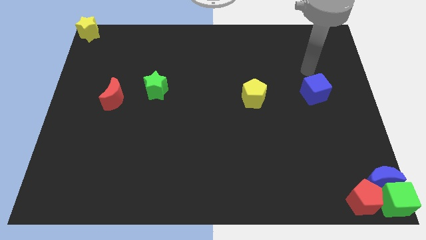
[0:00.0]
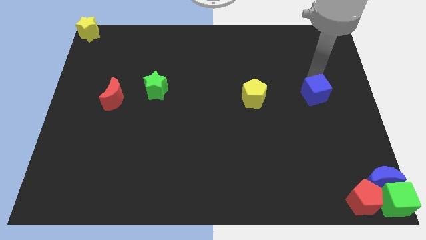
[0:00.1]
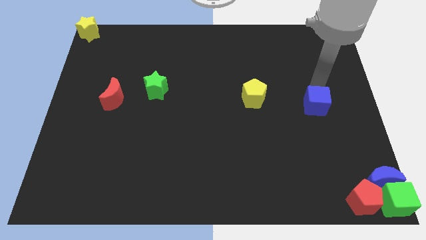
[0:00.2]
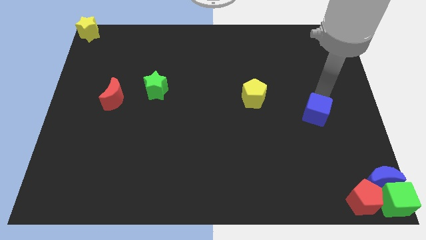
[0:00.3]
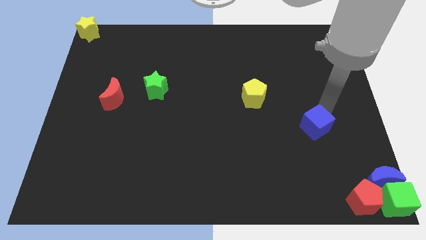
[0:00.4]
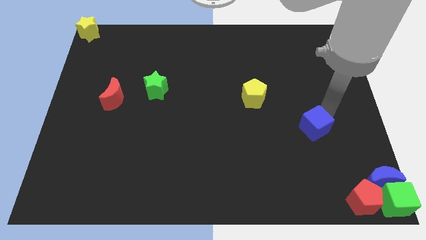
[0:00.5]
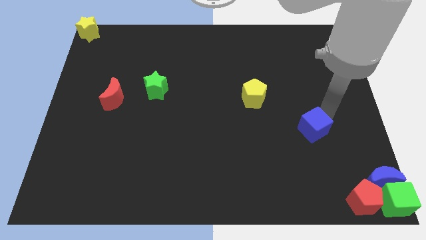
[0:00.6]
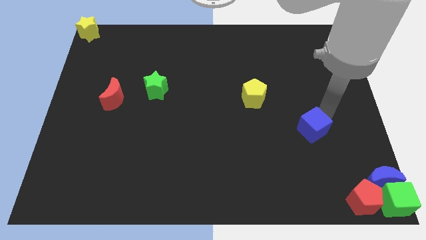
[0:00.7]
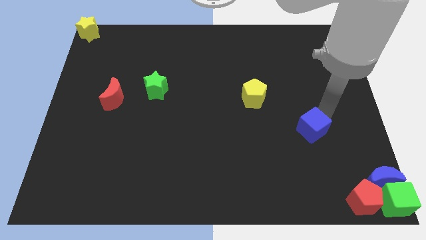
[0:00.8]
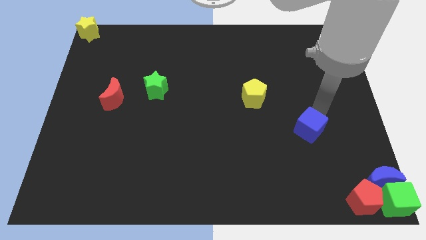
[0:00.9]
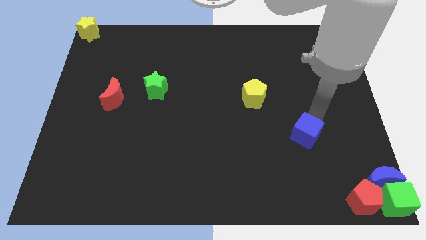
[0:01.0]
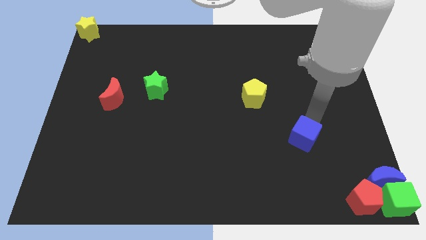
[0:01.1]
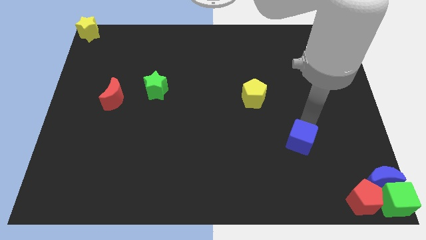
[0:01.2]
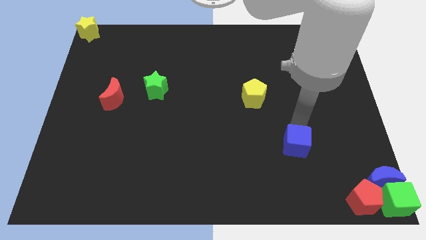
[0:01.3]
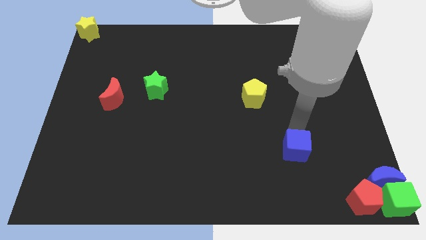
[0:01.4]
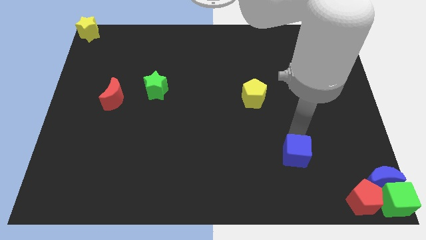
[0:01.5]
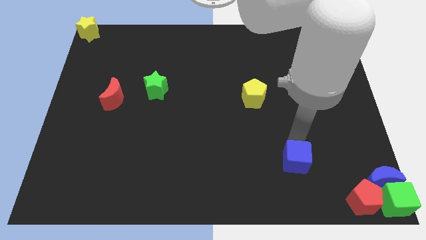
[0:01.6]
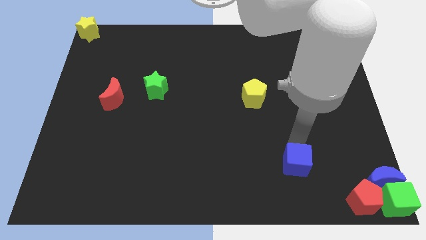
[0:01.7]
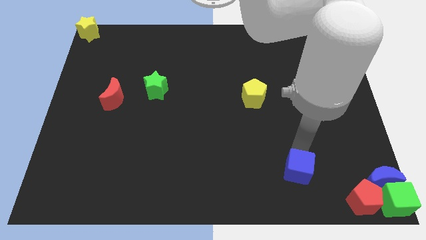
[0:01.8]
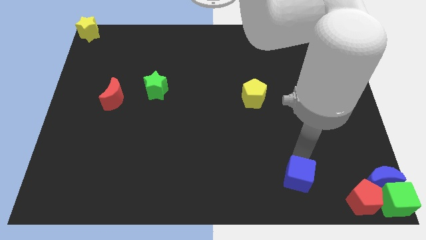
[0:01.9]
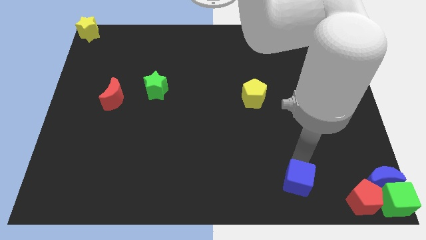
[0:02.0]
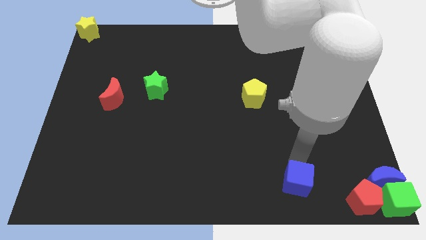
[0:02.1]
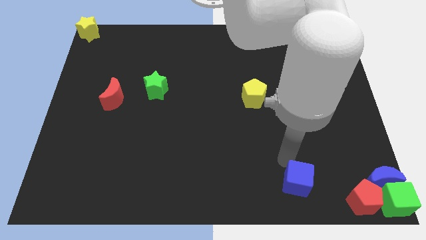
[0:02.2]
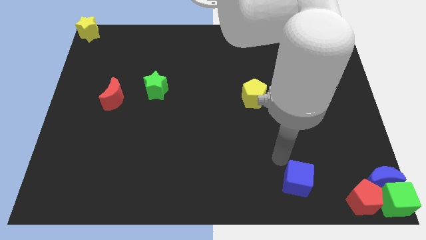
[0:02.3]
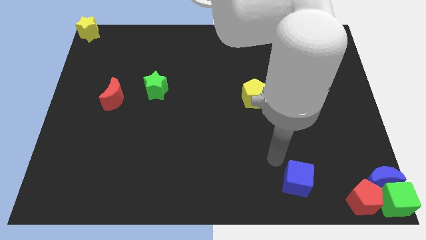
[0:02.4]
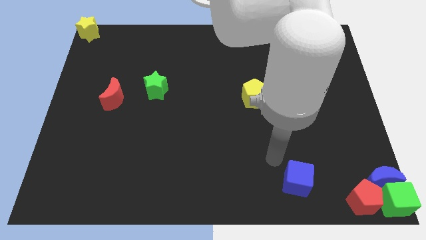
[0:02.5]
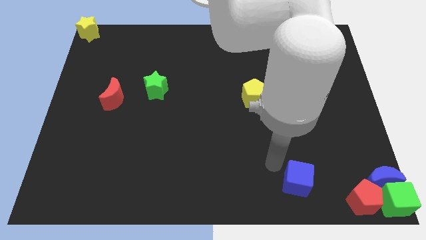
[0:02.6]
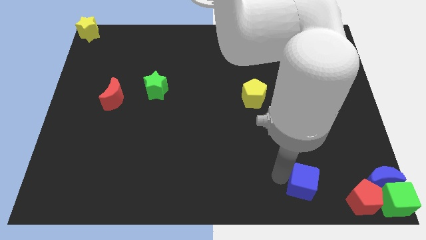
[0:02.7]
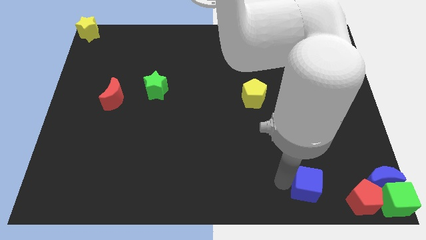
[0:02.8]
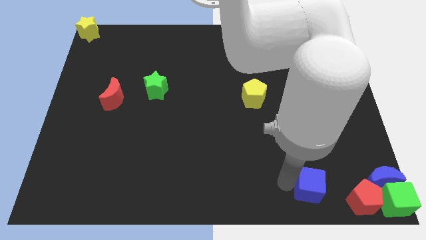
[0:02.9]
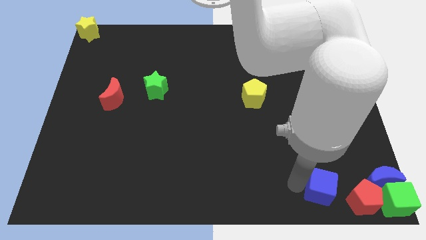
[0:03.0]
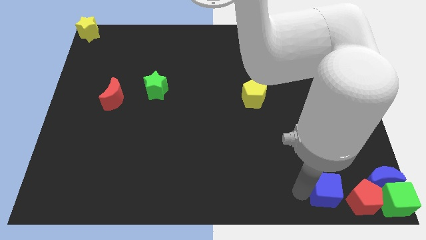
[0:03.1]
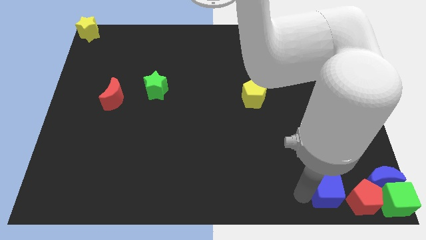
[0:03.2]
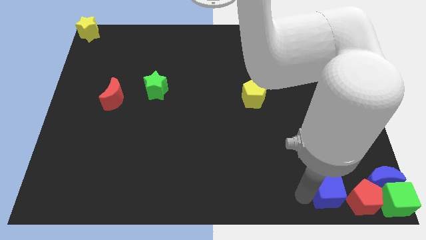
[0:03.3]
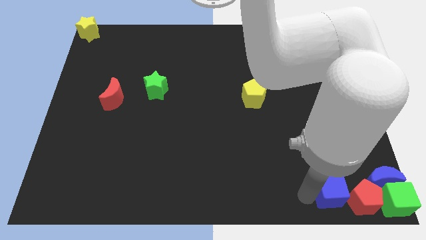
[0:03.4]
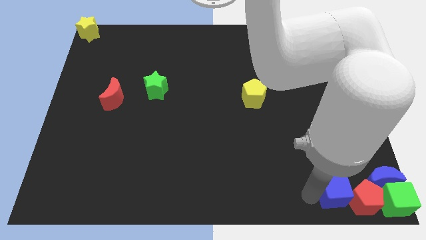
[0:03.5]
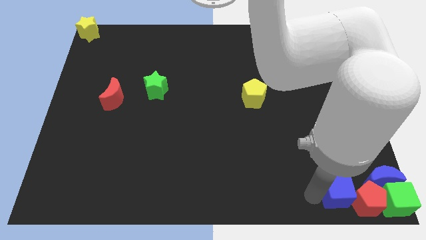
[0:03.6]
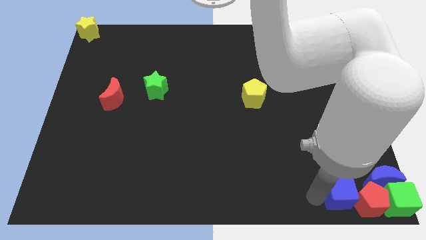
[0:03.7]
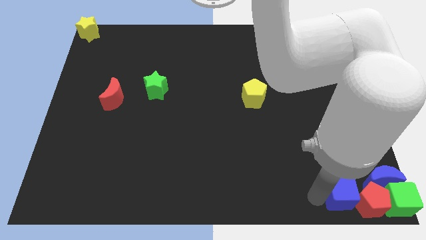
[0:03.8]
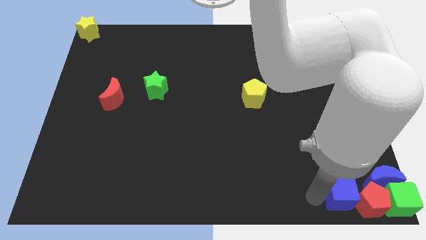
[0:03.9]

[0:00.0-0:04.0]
move the blue cube to the left side of the red pentagon

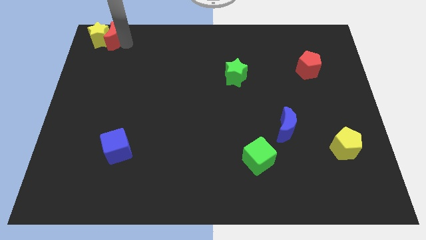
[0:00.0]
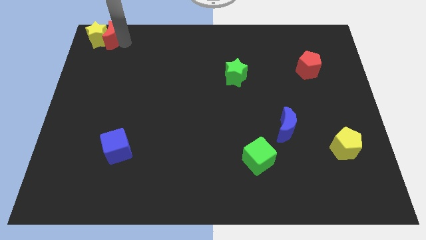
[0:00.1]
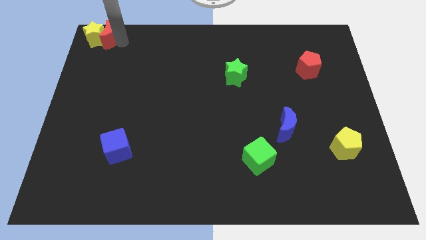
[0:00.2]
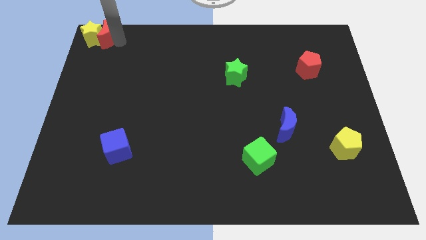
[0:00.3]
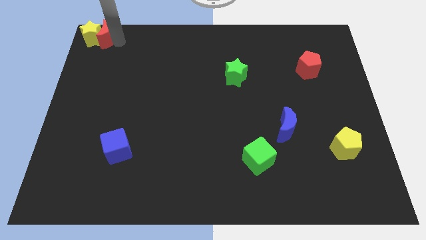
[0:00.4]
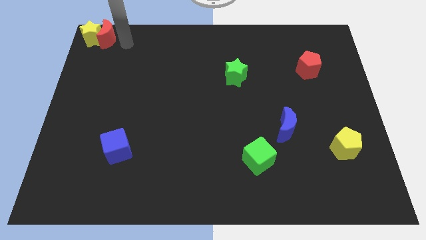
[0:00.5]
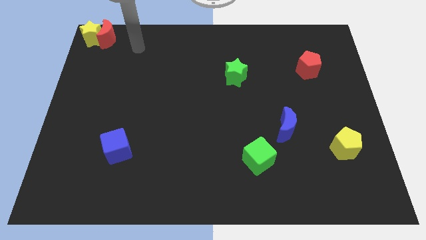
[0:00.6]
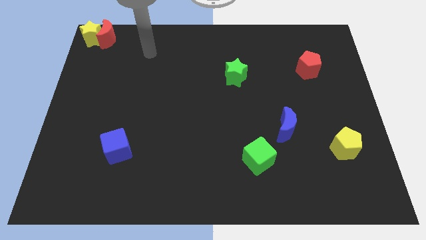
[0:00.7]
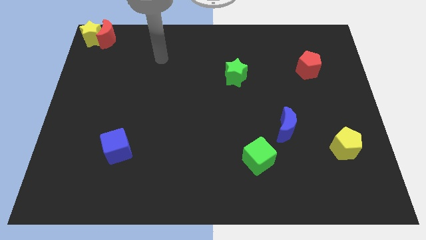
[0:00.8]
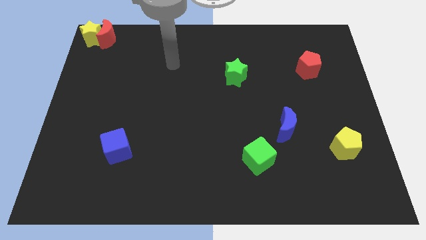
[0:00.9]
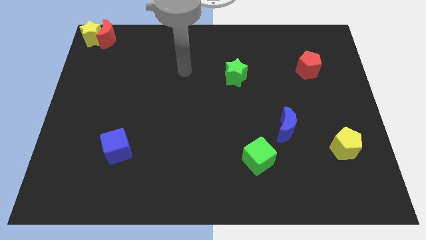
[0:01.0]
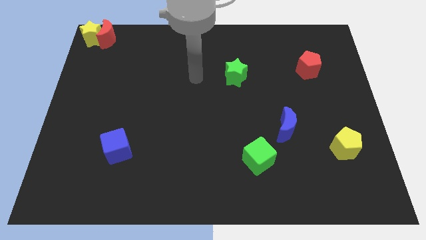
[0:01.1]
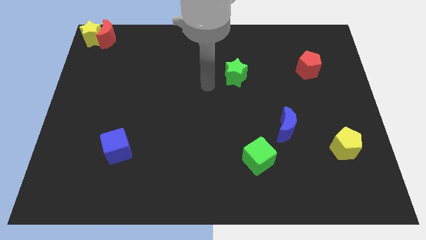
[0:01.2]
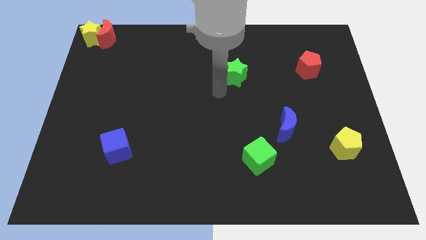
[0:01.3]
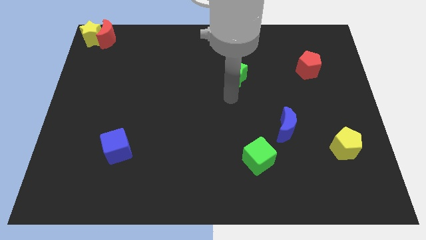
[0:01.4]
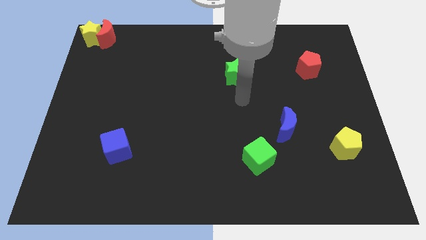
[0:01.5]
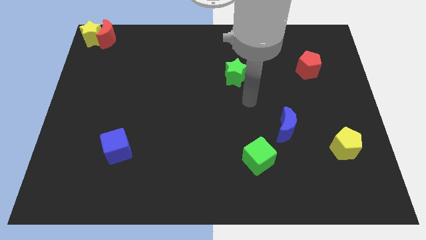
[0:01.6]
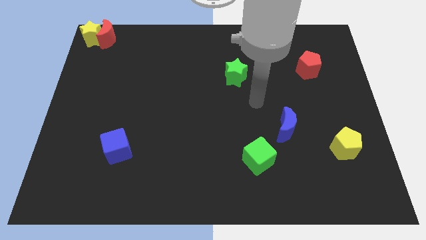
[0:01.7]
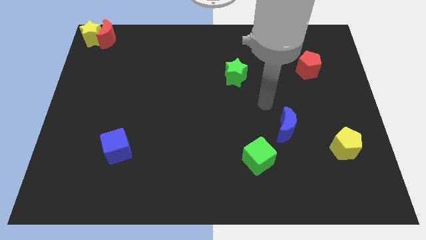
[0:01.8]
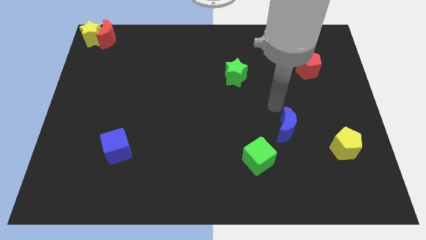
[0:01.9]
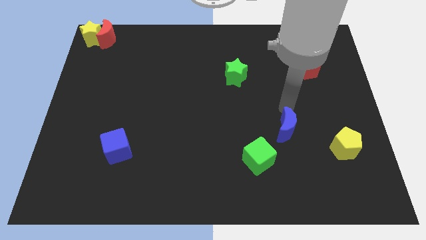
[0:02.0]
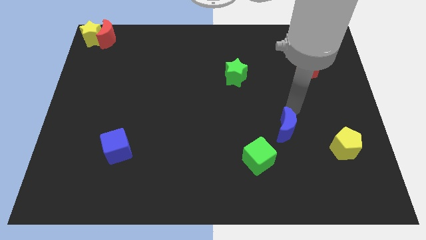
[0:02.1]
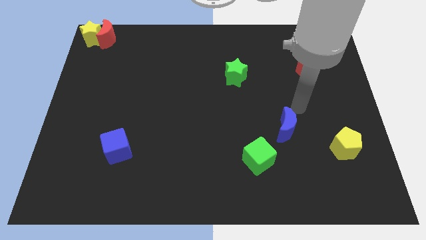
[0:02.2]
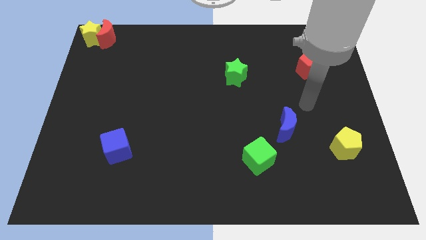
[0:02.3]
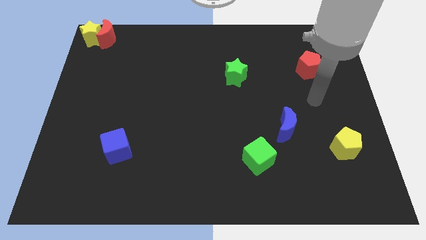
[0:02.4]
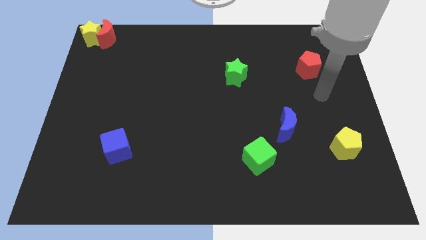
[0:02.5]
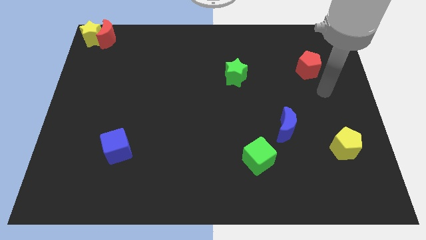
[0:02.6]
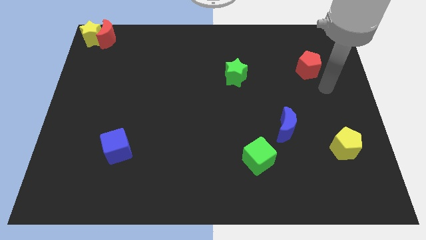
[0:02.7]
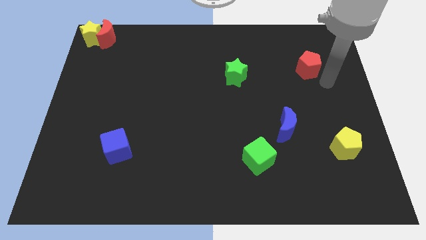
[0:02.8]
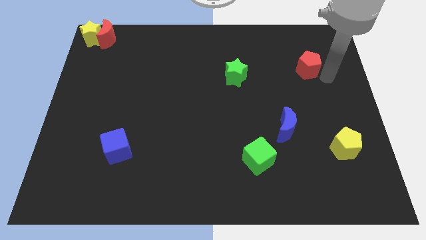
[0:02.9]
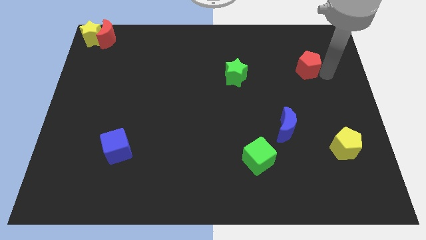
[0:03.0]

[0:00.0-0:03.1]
point your arm to the right side of red pentagon

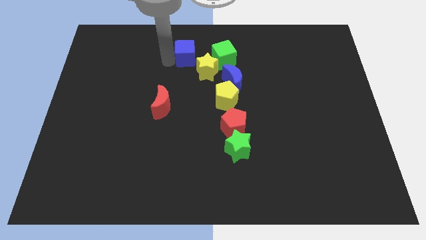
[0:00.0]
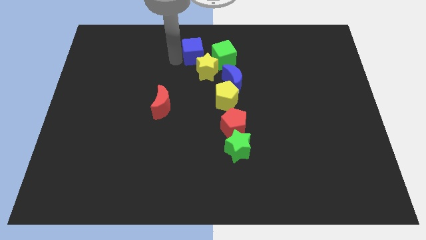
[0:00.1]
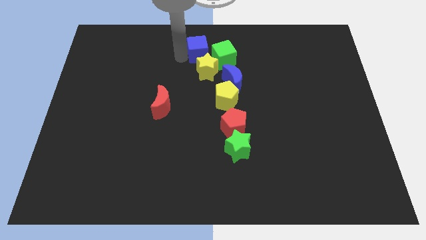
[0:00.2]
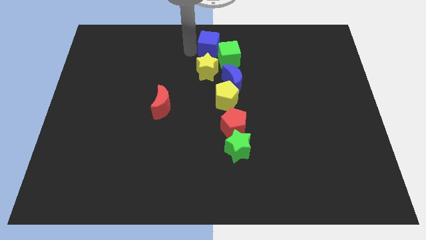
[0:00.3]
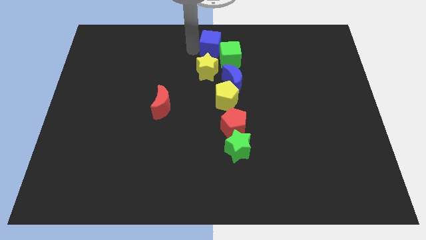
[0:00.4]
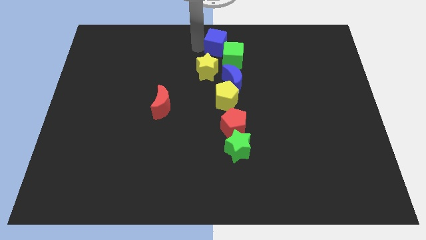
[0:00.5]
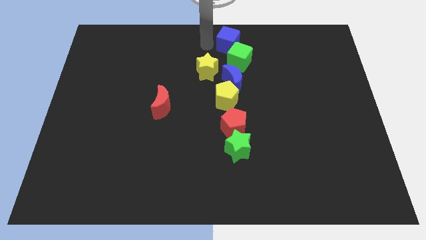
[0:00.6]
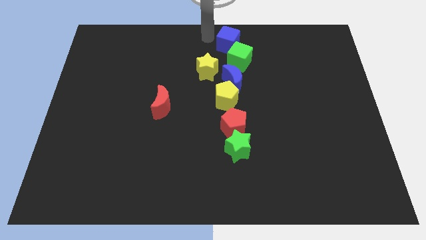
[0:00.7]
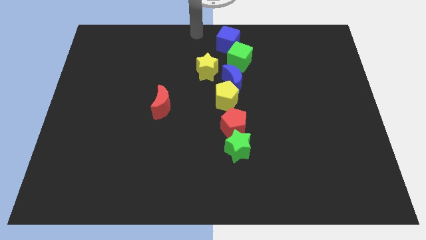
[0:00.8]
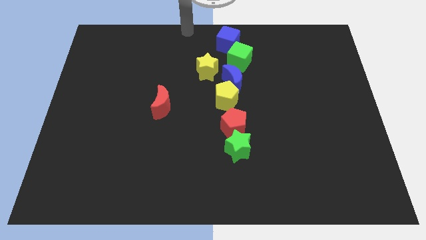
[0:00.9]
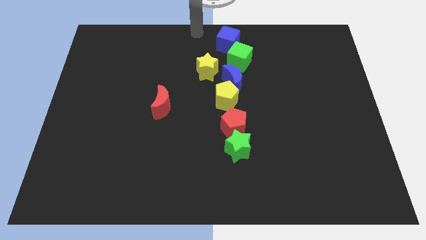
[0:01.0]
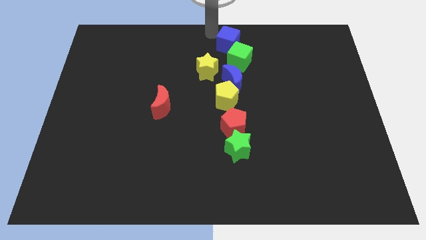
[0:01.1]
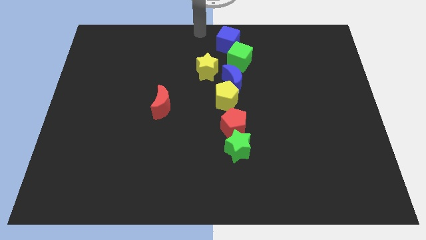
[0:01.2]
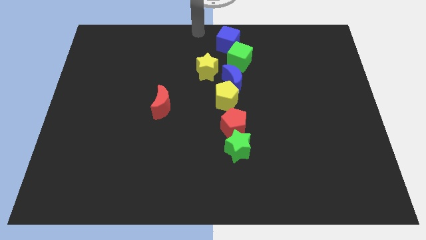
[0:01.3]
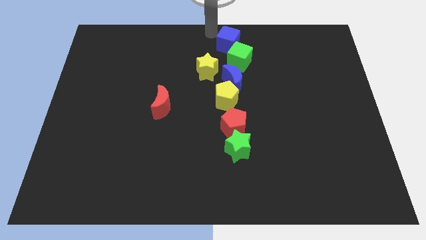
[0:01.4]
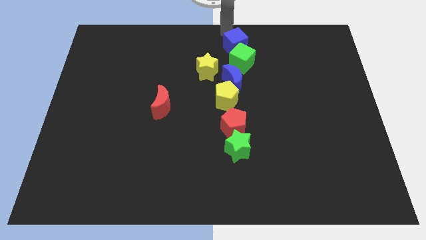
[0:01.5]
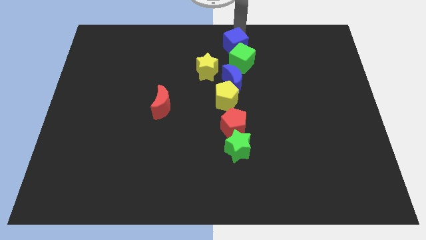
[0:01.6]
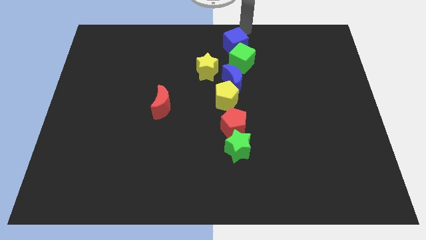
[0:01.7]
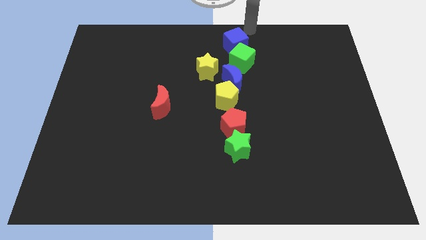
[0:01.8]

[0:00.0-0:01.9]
push the blue cube to the top side of the green cube
